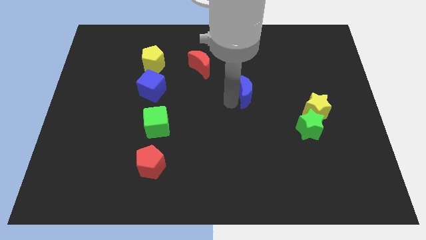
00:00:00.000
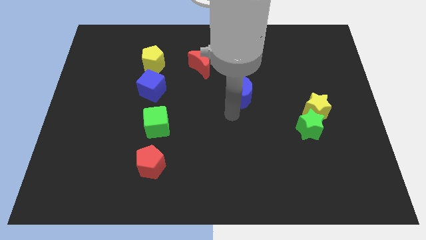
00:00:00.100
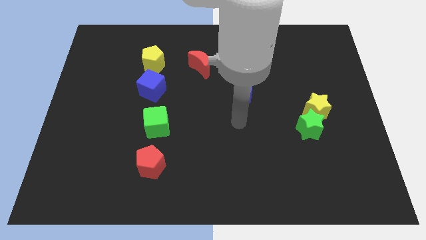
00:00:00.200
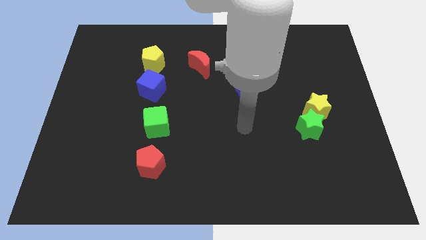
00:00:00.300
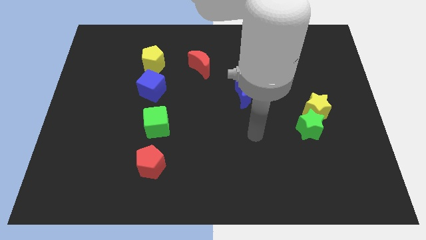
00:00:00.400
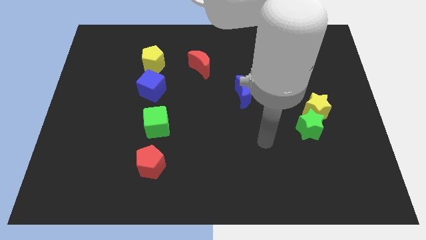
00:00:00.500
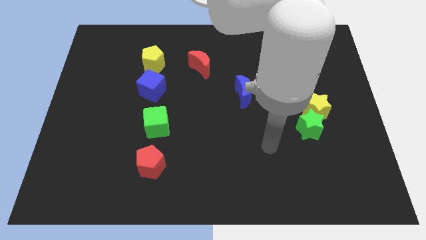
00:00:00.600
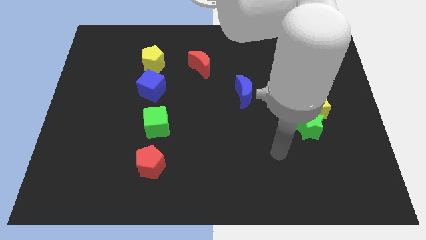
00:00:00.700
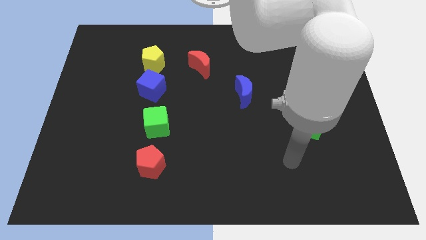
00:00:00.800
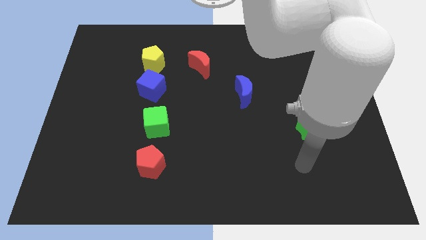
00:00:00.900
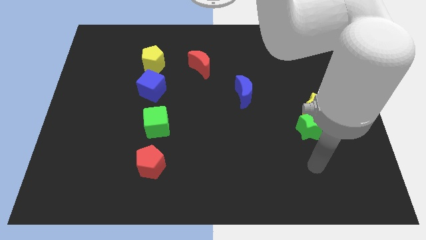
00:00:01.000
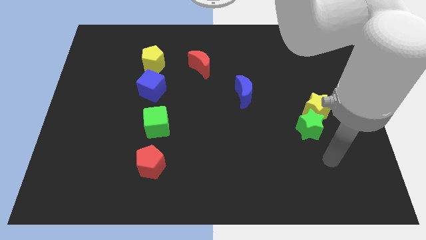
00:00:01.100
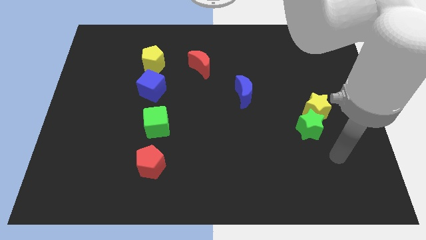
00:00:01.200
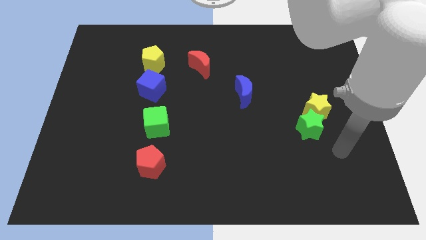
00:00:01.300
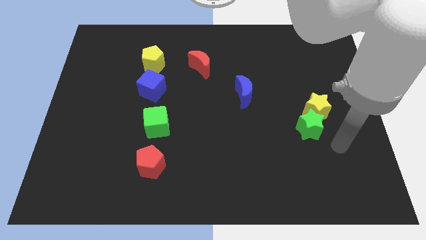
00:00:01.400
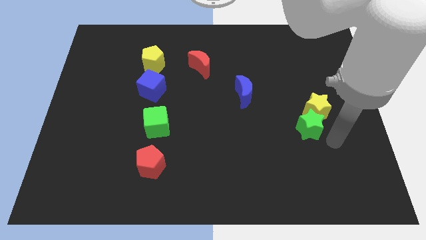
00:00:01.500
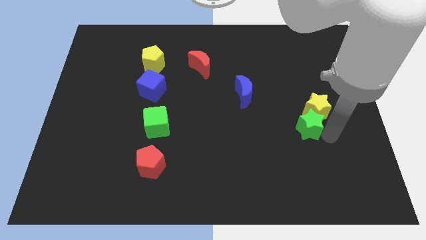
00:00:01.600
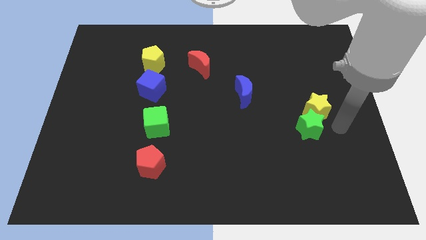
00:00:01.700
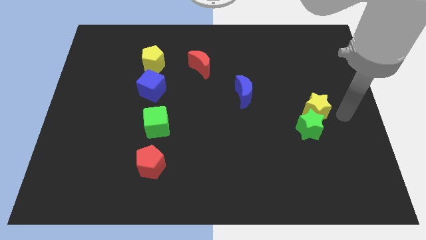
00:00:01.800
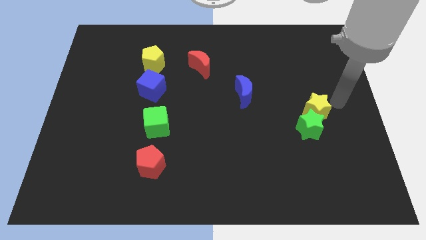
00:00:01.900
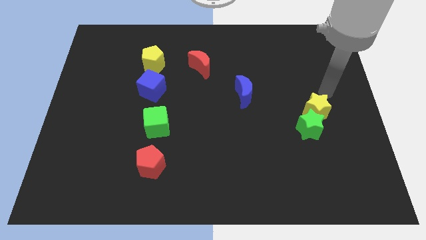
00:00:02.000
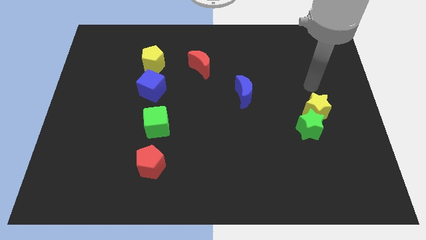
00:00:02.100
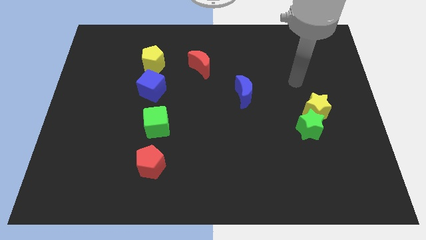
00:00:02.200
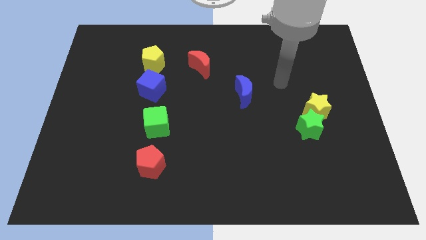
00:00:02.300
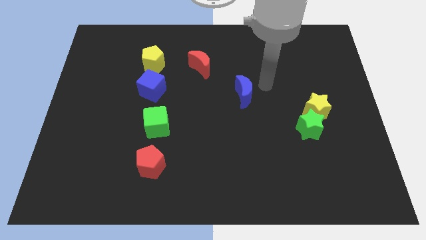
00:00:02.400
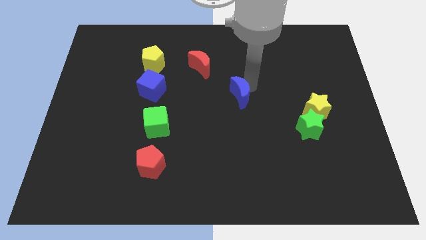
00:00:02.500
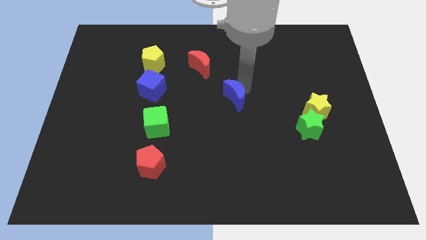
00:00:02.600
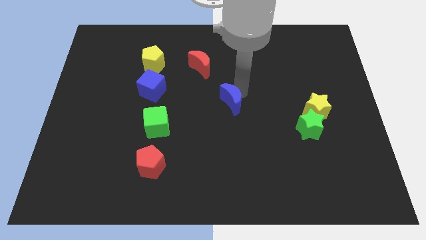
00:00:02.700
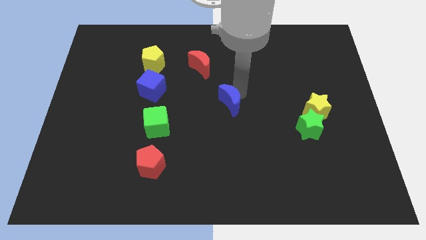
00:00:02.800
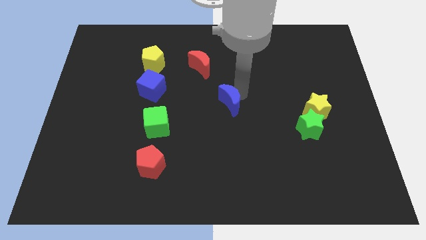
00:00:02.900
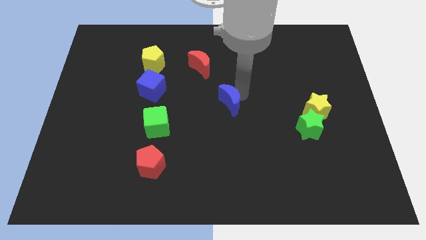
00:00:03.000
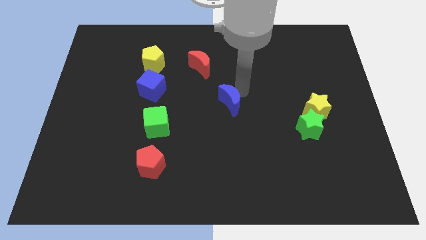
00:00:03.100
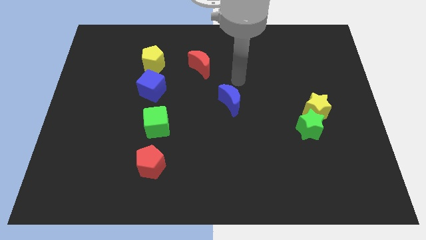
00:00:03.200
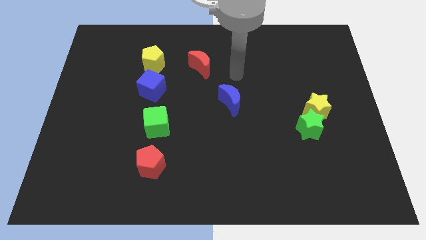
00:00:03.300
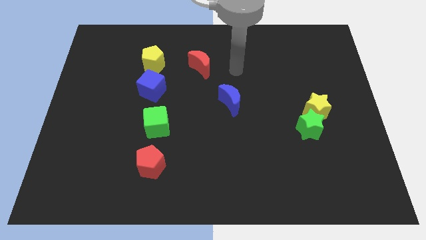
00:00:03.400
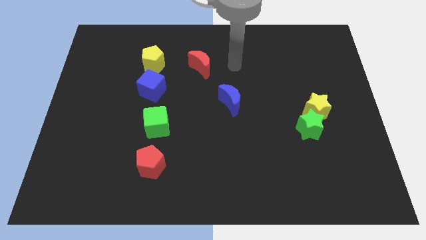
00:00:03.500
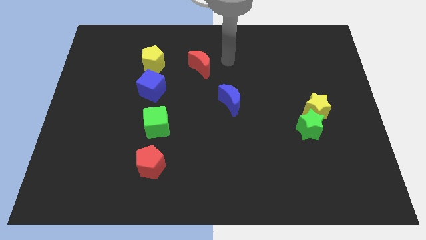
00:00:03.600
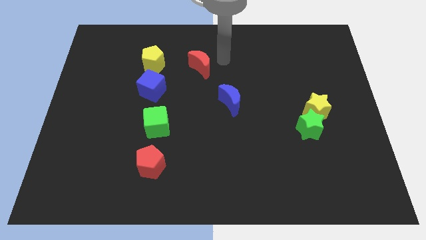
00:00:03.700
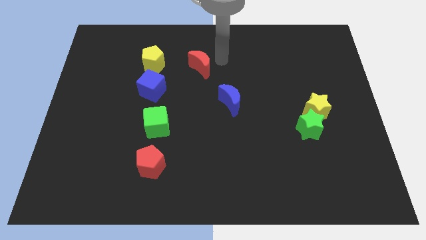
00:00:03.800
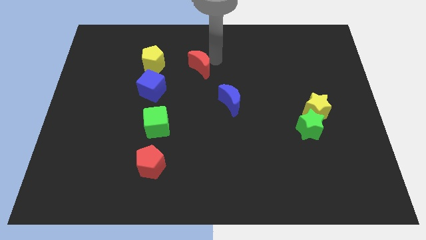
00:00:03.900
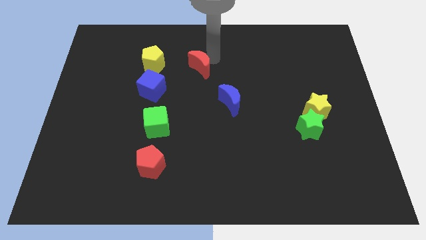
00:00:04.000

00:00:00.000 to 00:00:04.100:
move the blue moon slightly to the left

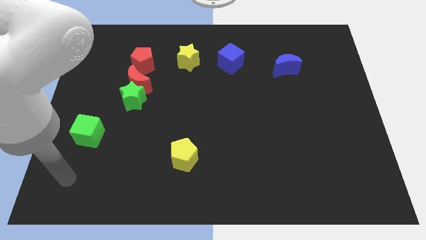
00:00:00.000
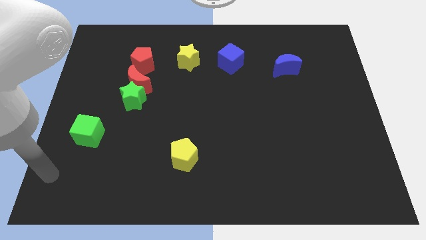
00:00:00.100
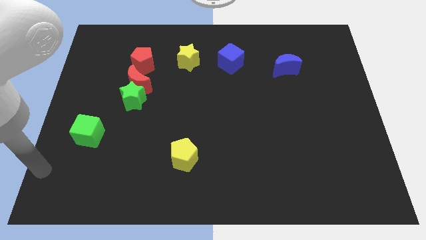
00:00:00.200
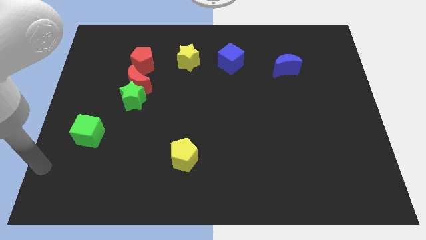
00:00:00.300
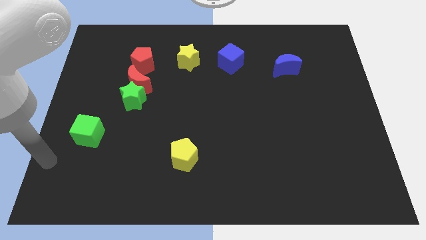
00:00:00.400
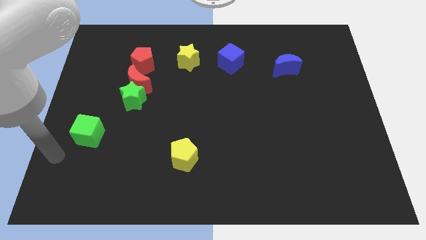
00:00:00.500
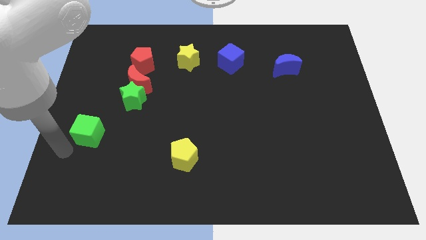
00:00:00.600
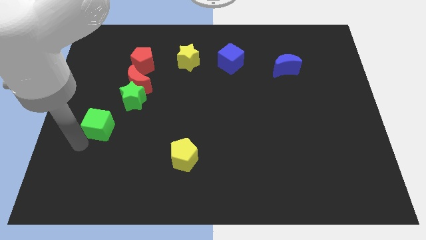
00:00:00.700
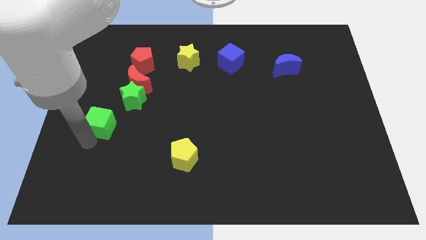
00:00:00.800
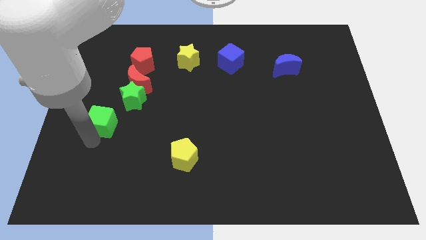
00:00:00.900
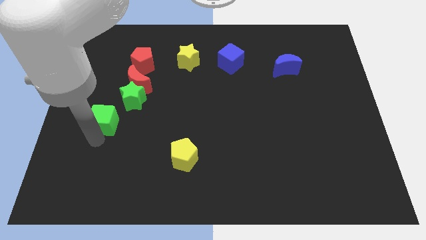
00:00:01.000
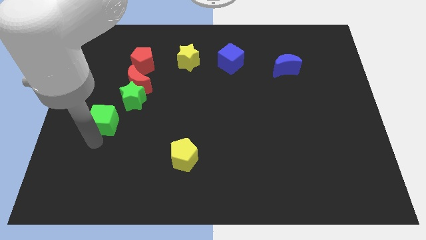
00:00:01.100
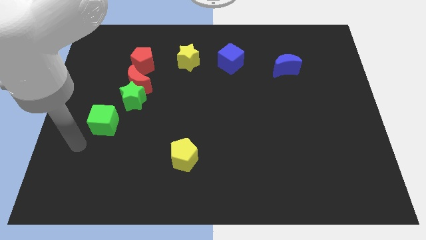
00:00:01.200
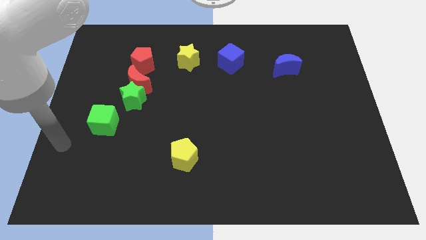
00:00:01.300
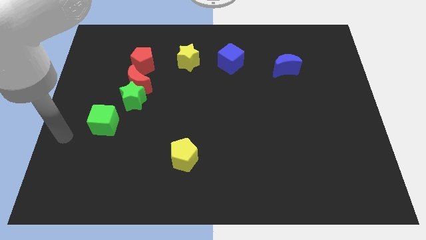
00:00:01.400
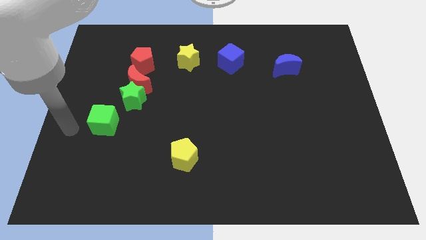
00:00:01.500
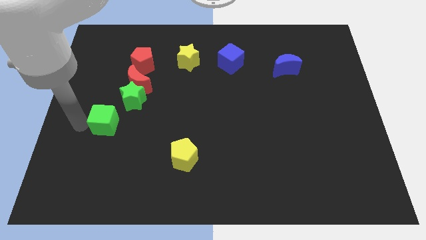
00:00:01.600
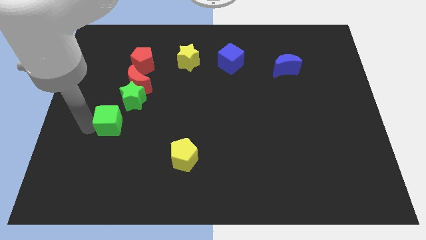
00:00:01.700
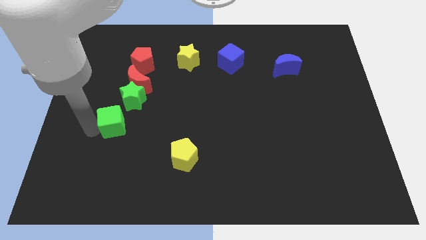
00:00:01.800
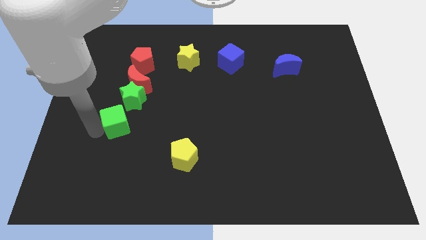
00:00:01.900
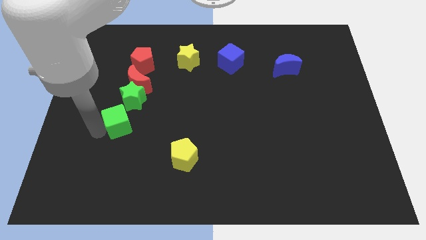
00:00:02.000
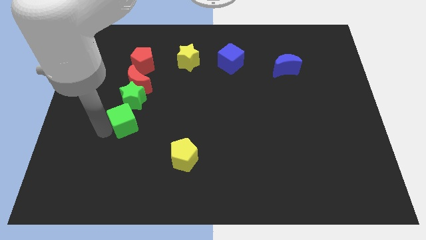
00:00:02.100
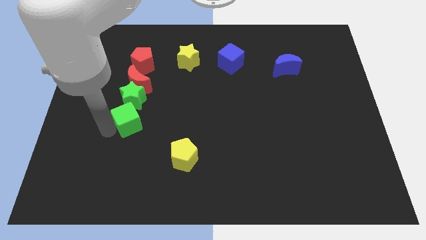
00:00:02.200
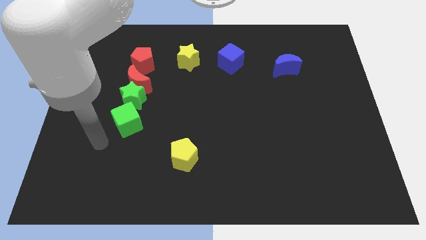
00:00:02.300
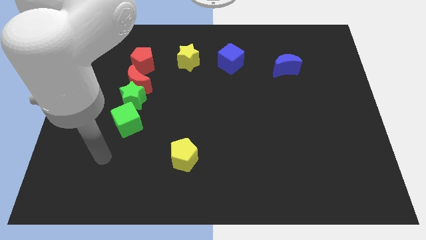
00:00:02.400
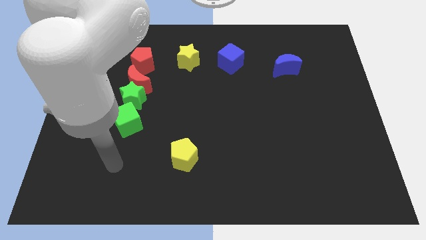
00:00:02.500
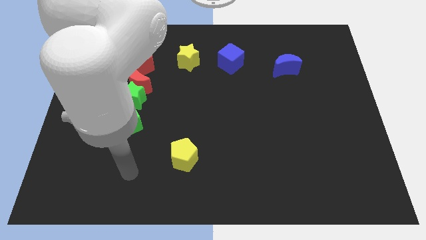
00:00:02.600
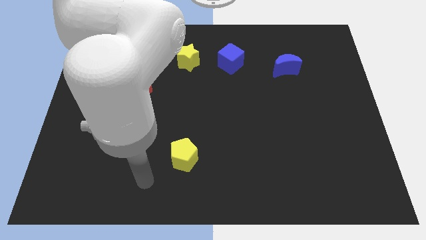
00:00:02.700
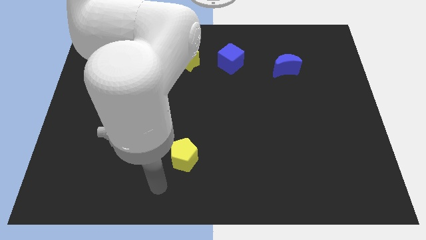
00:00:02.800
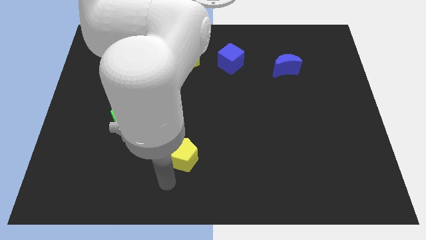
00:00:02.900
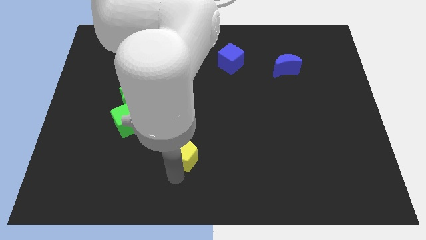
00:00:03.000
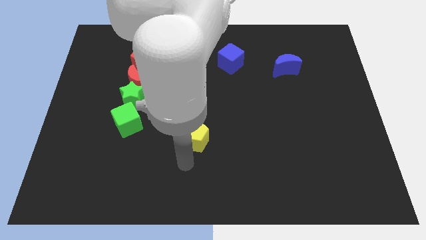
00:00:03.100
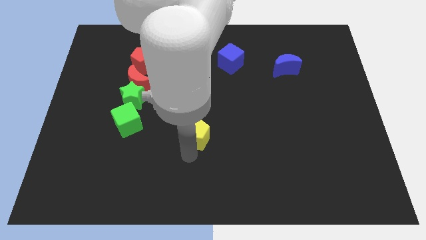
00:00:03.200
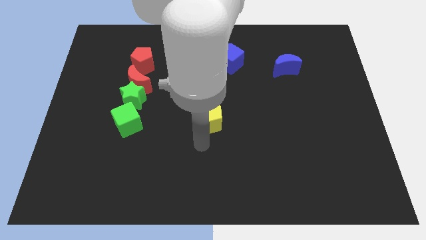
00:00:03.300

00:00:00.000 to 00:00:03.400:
move the green cube and yellow pentagon horizontally to each other

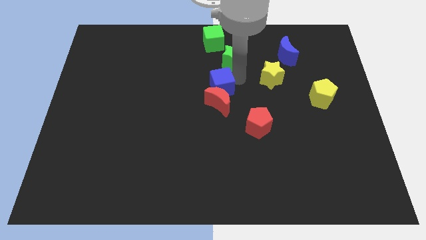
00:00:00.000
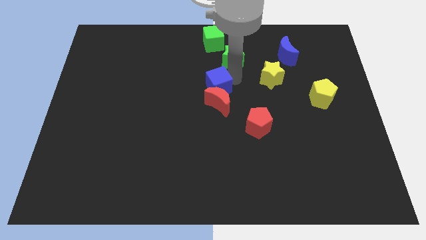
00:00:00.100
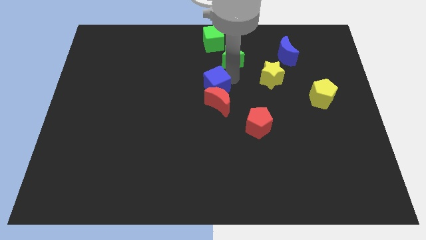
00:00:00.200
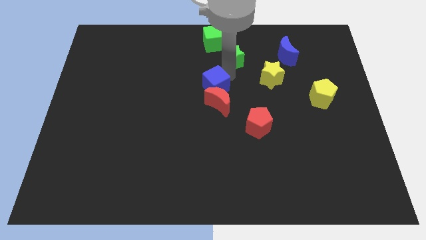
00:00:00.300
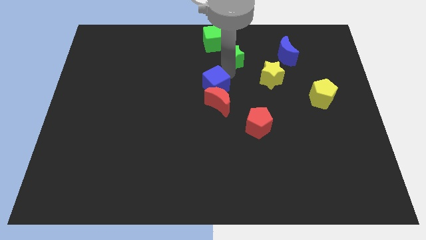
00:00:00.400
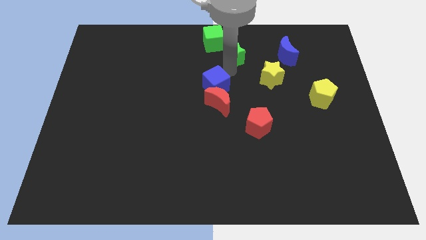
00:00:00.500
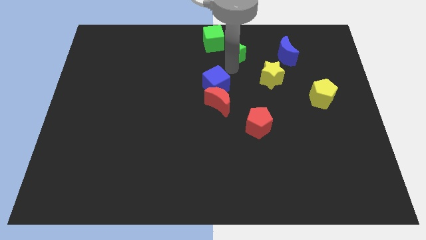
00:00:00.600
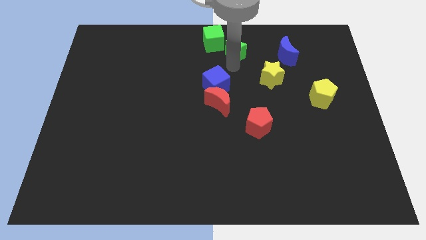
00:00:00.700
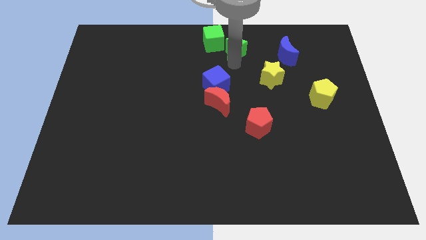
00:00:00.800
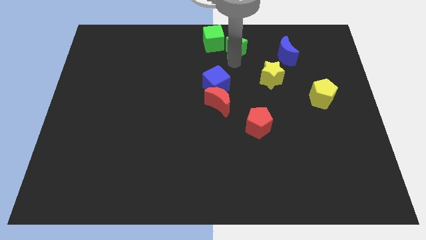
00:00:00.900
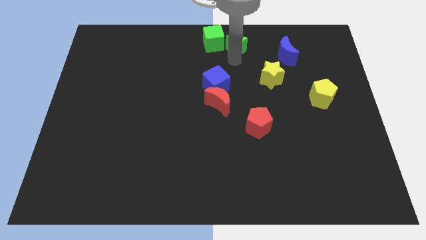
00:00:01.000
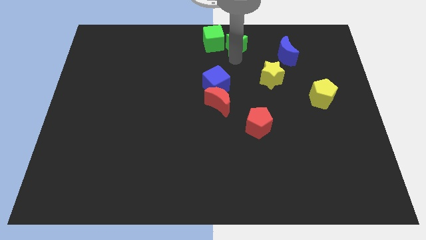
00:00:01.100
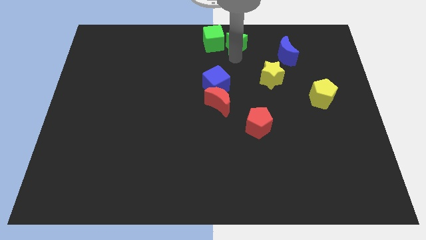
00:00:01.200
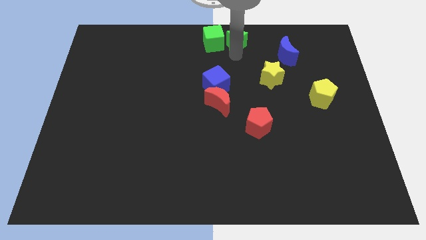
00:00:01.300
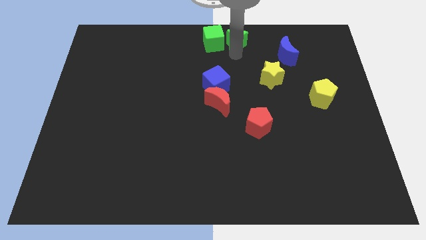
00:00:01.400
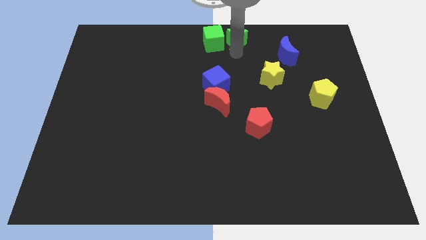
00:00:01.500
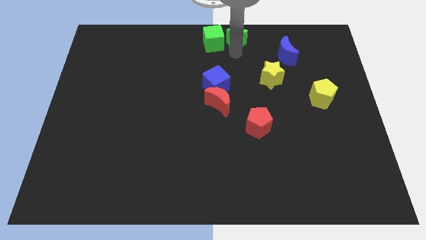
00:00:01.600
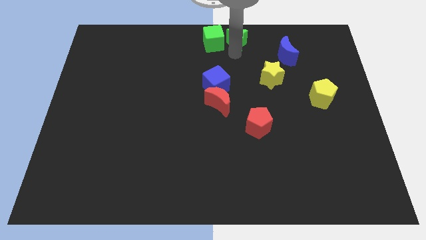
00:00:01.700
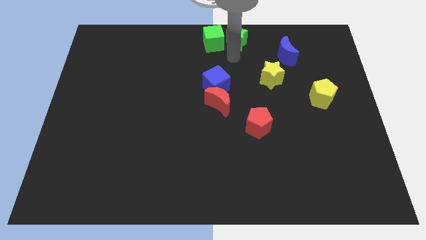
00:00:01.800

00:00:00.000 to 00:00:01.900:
move the green star to the right side of the green cube
